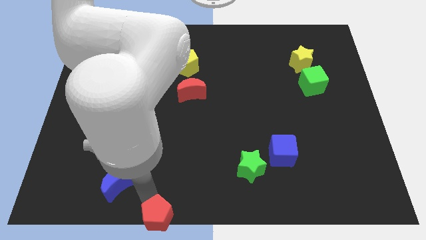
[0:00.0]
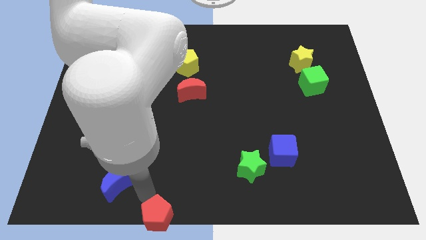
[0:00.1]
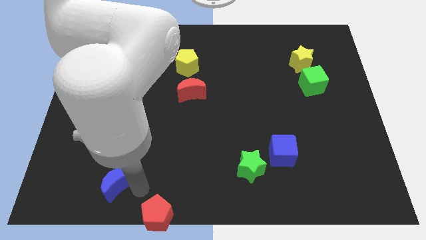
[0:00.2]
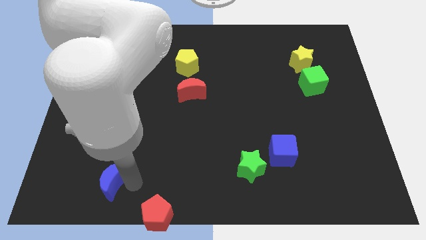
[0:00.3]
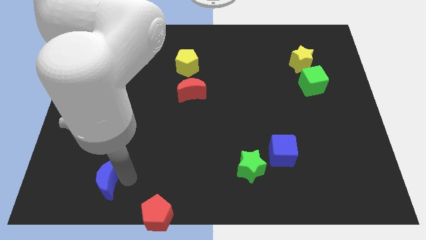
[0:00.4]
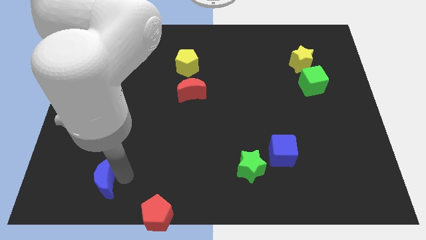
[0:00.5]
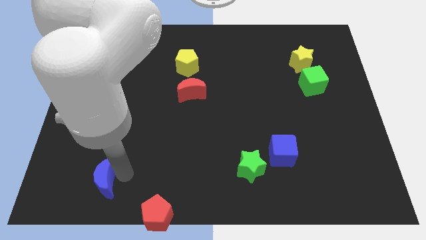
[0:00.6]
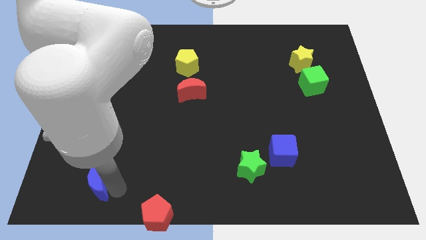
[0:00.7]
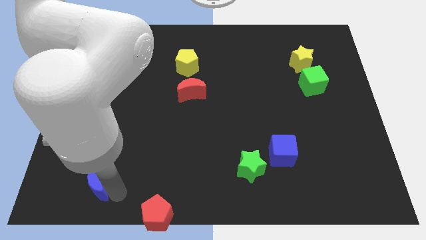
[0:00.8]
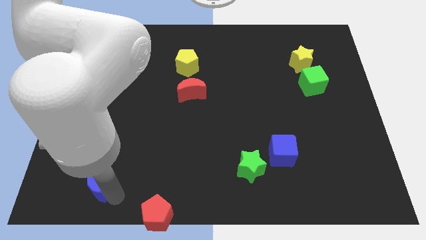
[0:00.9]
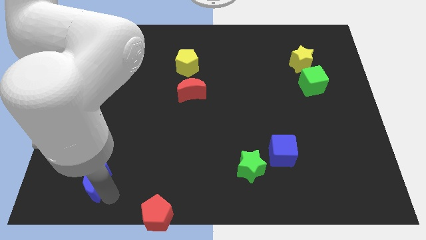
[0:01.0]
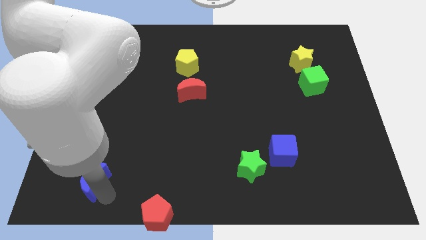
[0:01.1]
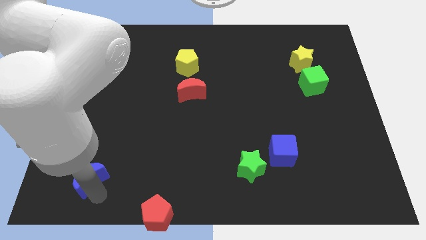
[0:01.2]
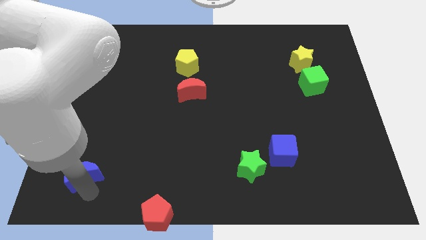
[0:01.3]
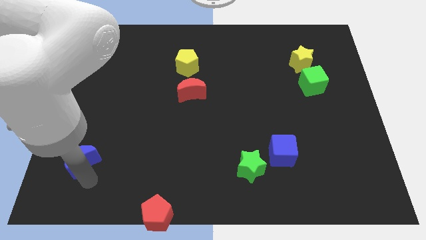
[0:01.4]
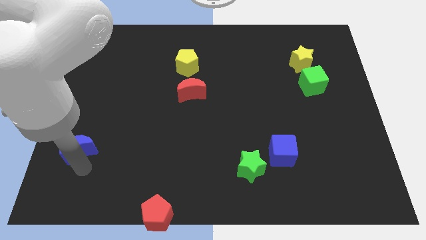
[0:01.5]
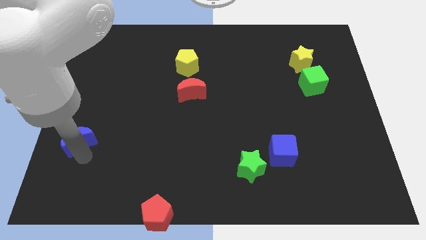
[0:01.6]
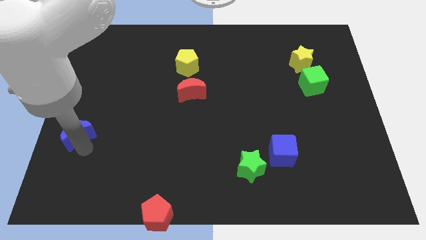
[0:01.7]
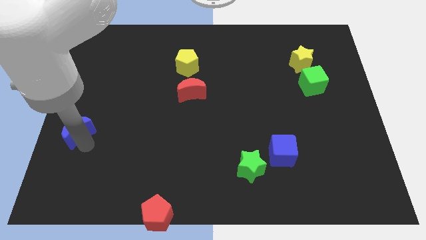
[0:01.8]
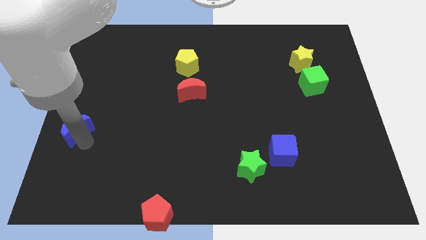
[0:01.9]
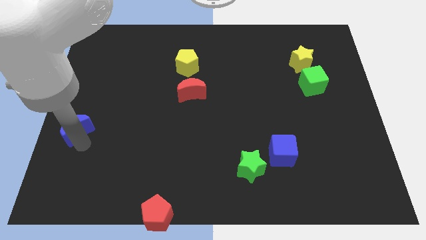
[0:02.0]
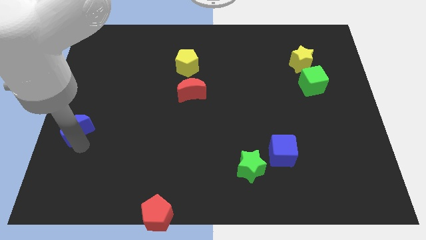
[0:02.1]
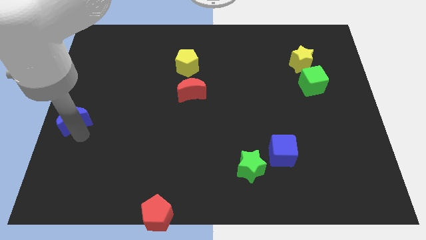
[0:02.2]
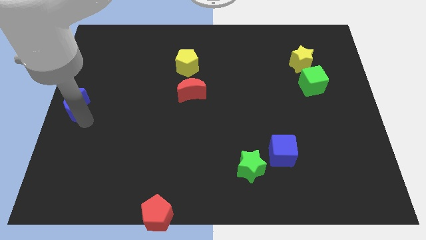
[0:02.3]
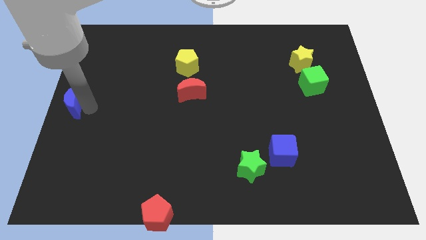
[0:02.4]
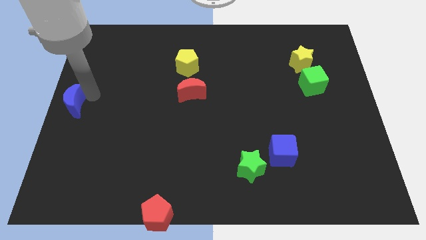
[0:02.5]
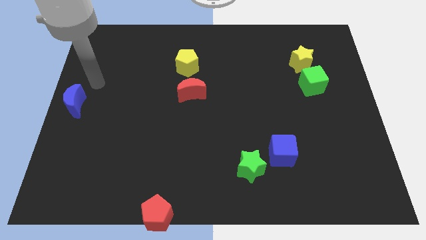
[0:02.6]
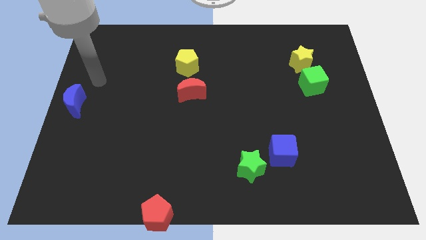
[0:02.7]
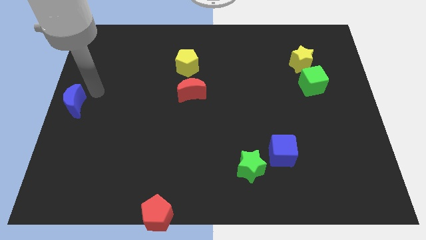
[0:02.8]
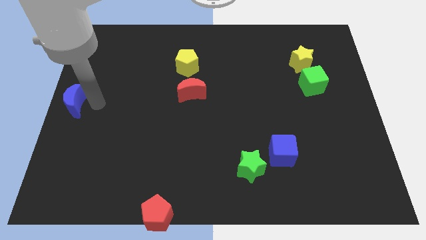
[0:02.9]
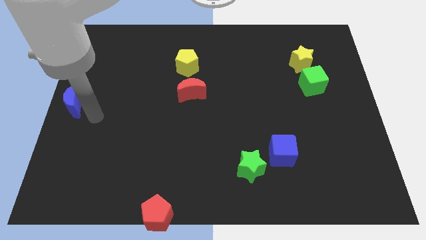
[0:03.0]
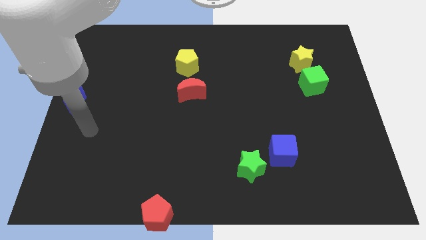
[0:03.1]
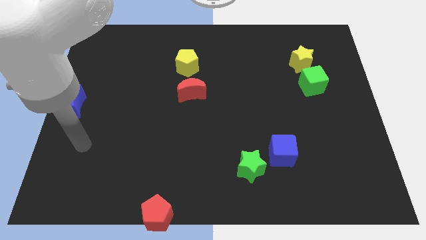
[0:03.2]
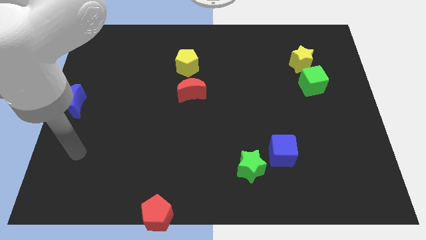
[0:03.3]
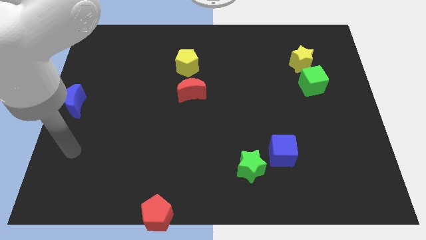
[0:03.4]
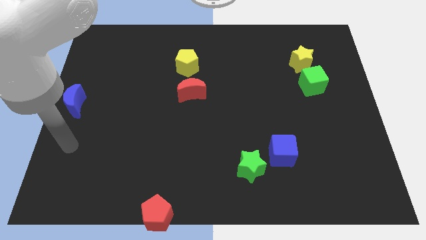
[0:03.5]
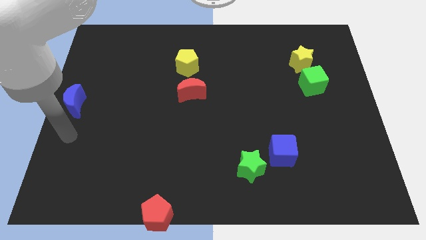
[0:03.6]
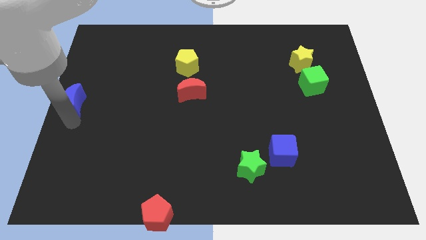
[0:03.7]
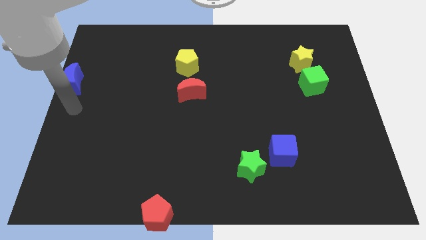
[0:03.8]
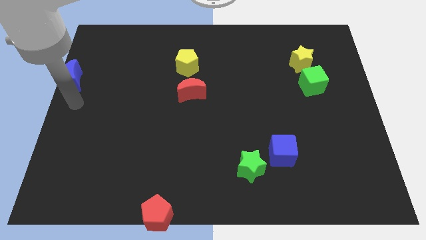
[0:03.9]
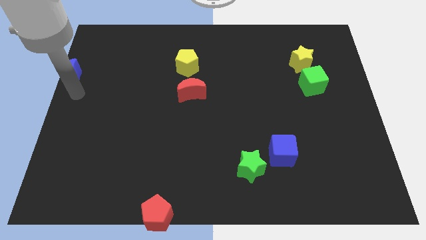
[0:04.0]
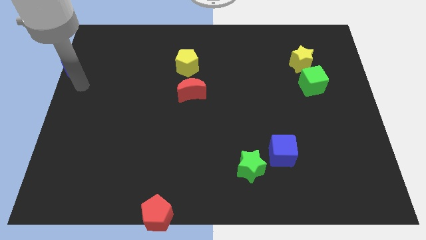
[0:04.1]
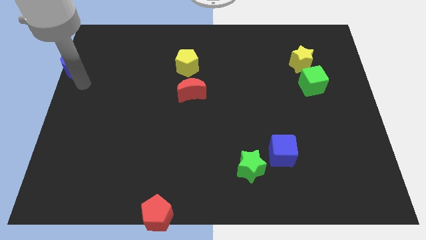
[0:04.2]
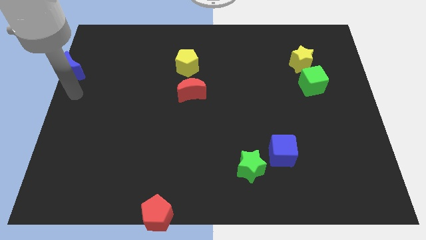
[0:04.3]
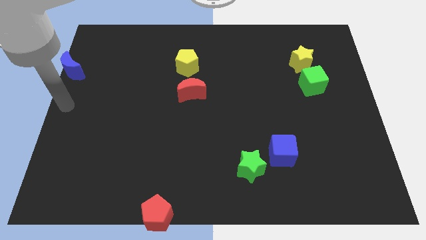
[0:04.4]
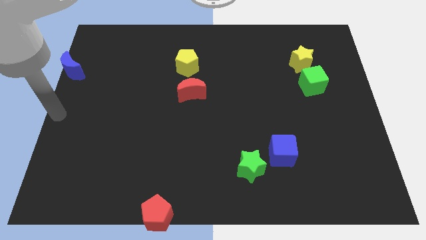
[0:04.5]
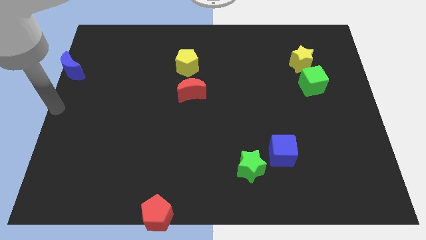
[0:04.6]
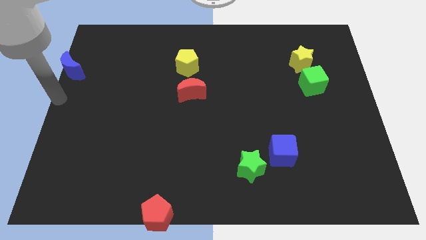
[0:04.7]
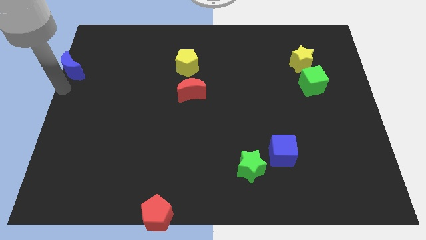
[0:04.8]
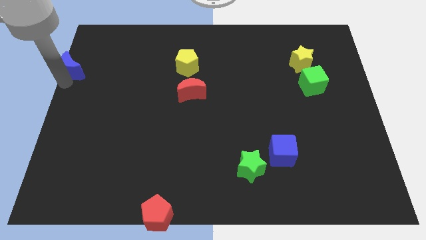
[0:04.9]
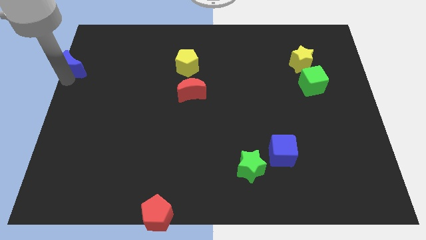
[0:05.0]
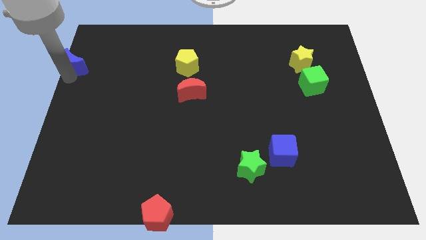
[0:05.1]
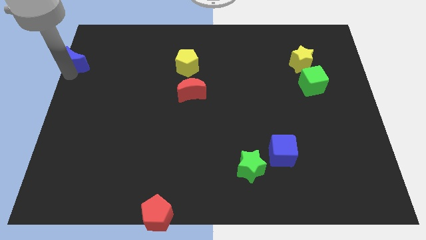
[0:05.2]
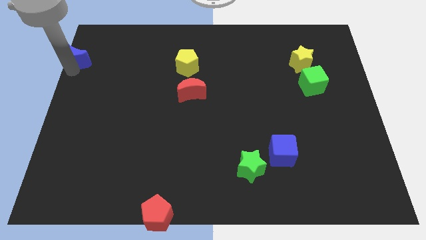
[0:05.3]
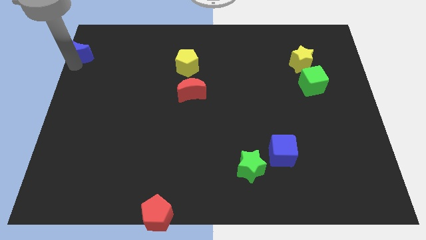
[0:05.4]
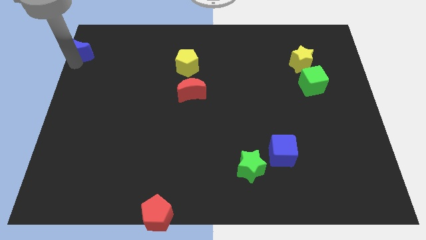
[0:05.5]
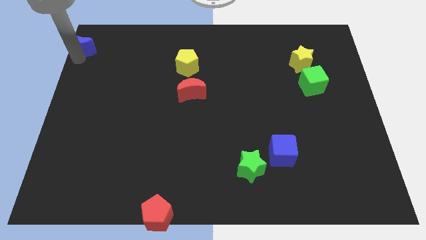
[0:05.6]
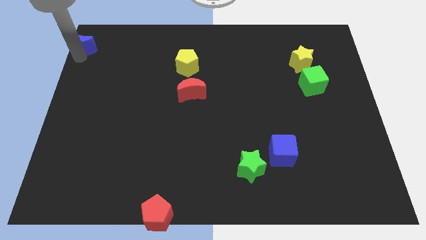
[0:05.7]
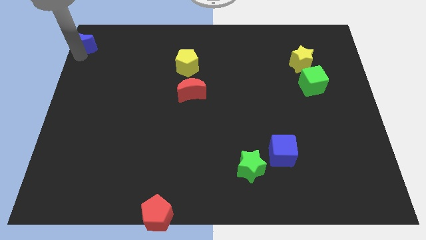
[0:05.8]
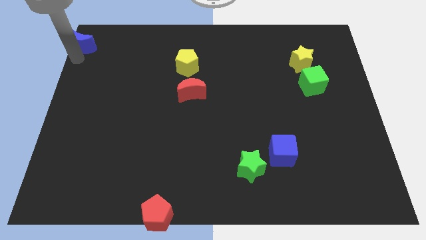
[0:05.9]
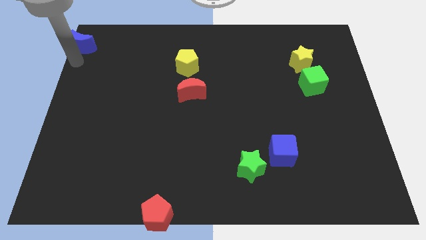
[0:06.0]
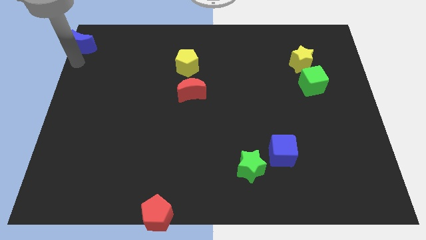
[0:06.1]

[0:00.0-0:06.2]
move the blue crescent towards the top left corner of the board

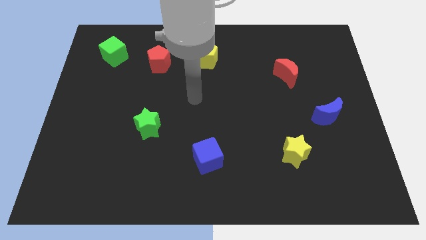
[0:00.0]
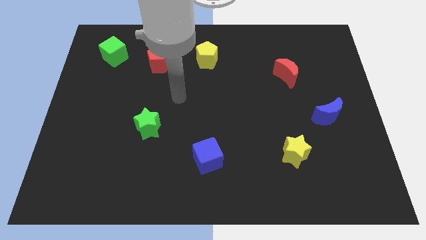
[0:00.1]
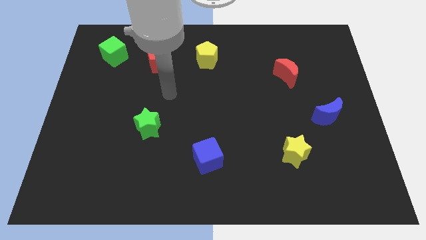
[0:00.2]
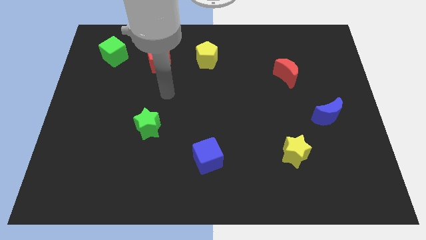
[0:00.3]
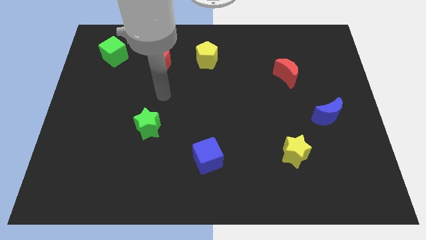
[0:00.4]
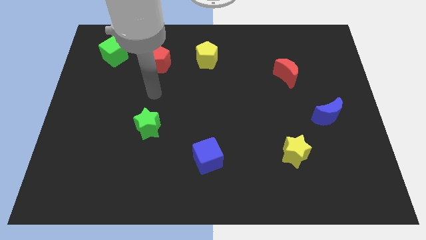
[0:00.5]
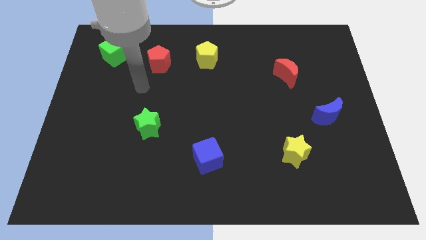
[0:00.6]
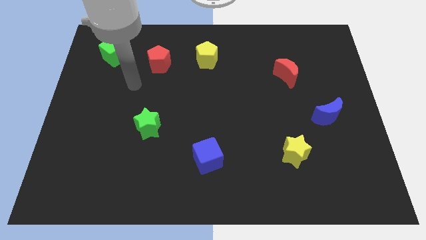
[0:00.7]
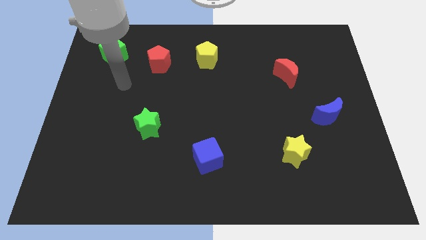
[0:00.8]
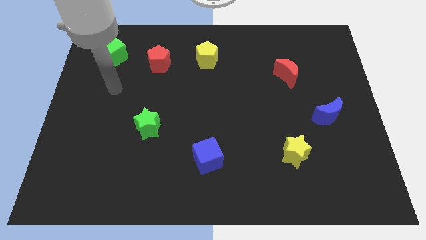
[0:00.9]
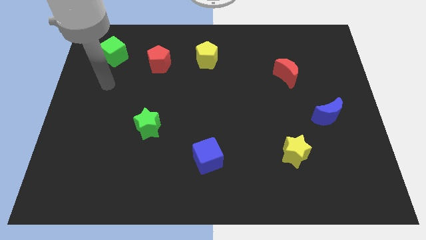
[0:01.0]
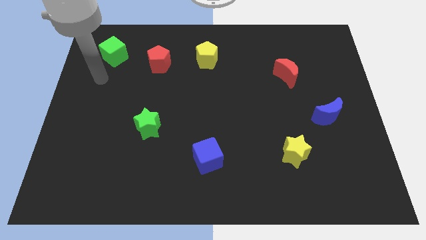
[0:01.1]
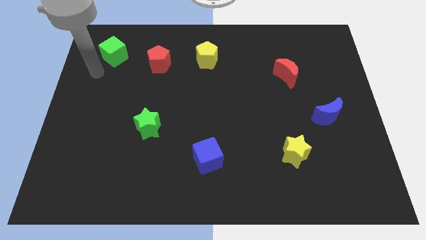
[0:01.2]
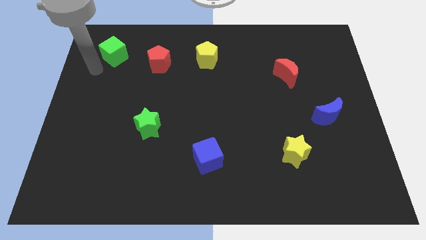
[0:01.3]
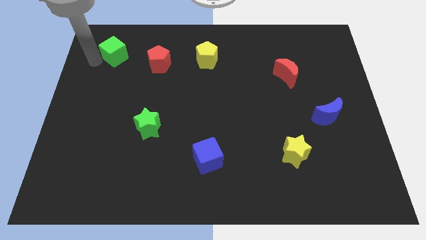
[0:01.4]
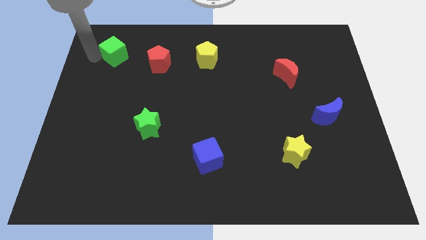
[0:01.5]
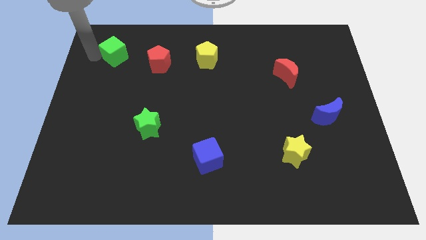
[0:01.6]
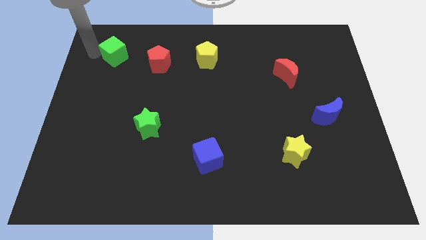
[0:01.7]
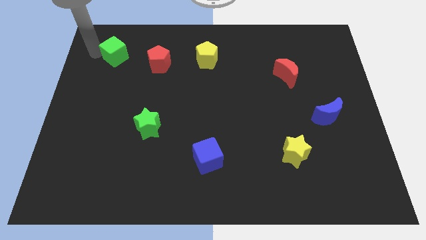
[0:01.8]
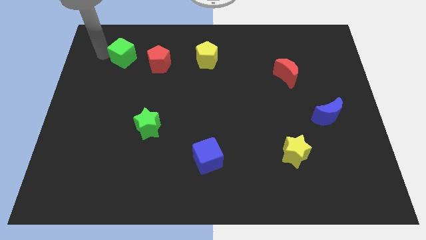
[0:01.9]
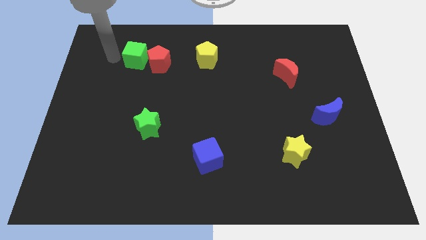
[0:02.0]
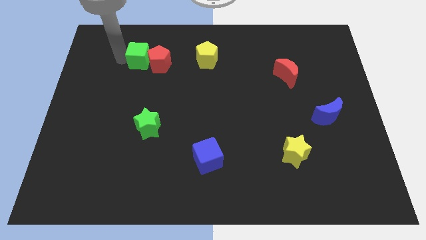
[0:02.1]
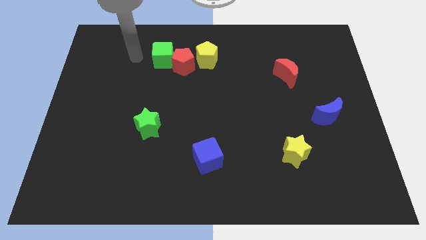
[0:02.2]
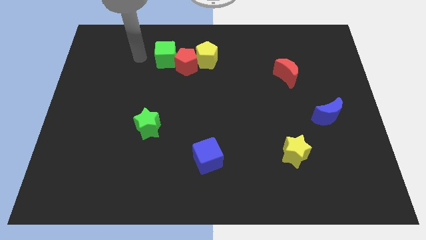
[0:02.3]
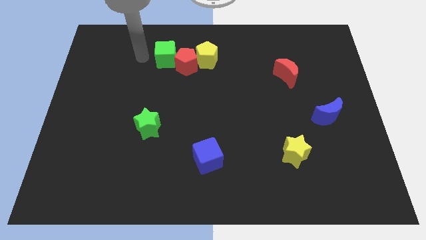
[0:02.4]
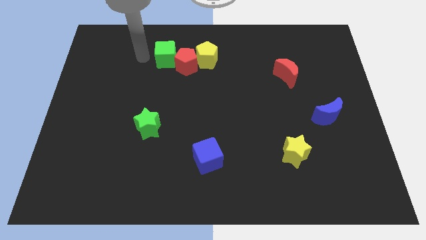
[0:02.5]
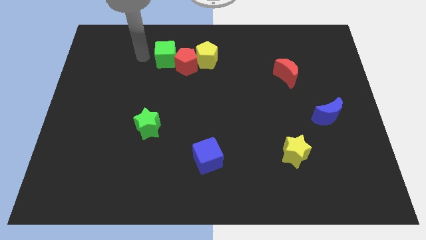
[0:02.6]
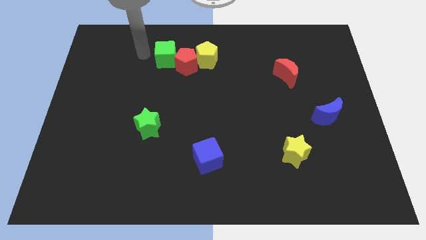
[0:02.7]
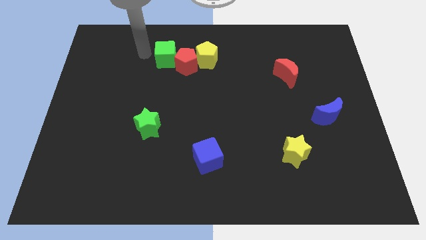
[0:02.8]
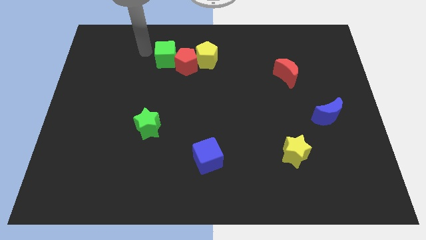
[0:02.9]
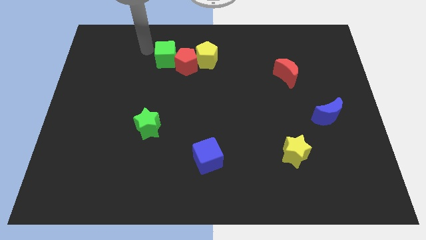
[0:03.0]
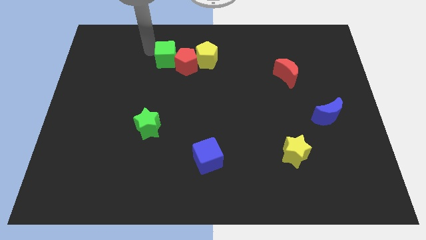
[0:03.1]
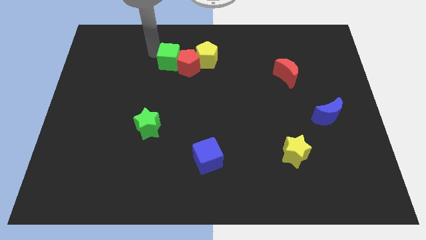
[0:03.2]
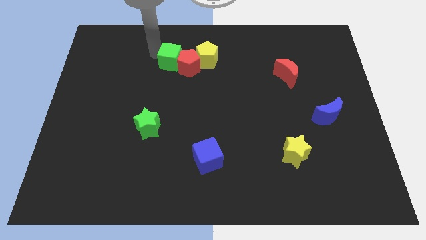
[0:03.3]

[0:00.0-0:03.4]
push the green cube into the red pentagon
